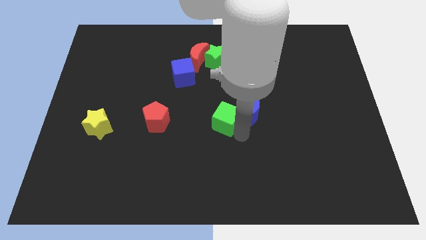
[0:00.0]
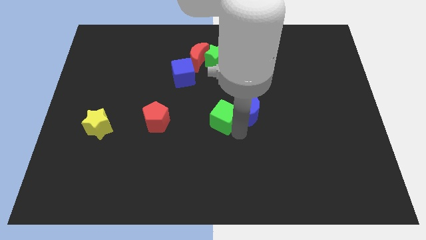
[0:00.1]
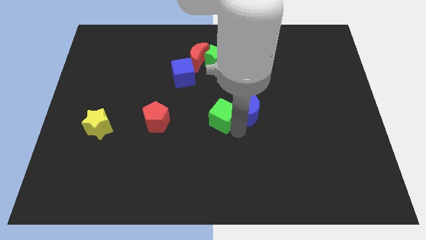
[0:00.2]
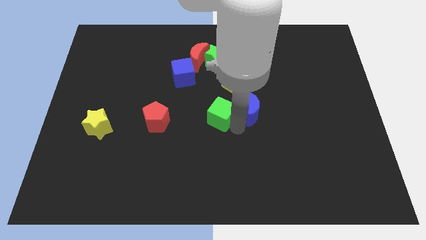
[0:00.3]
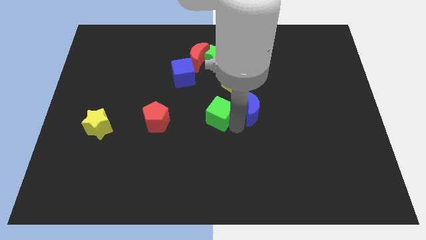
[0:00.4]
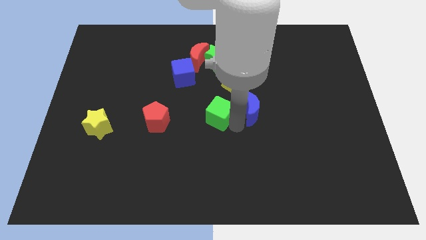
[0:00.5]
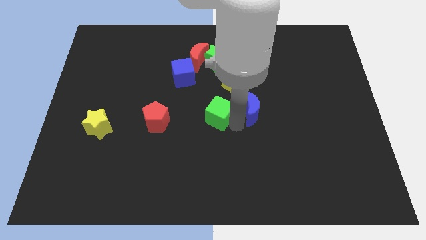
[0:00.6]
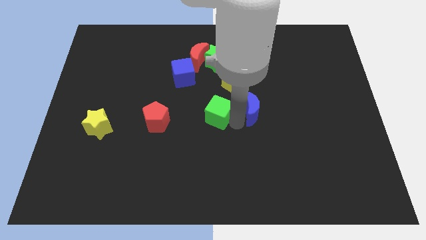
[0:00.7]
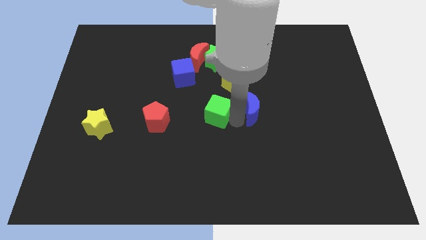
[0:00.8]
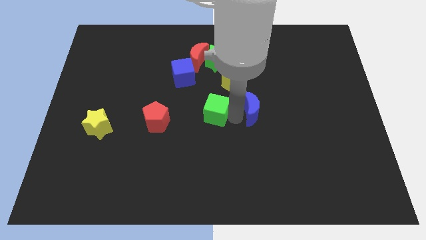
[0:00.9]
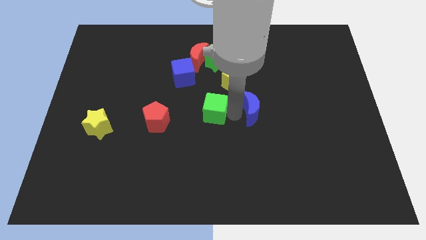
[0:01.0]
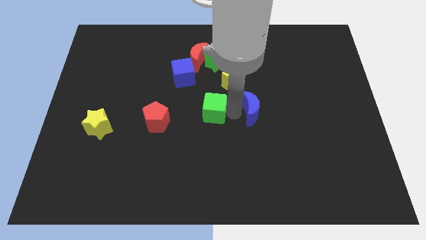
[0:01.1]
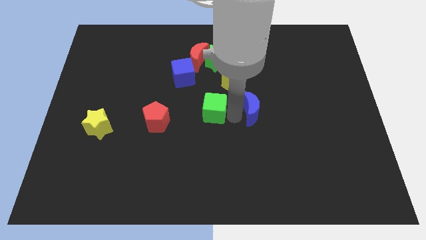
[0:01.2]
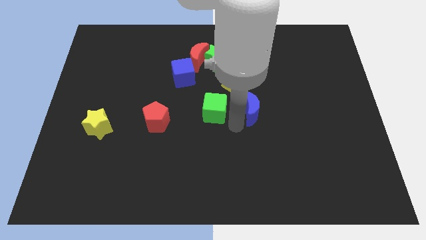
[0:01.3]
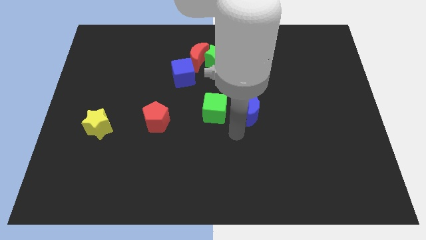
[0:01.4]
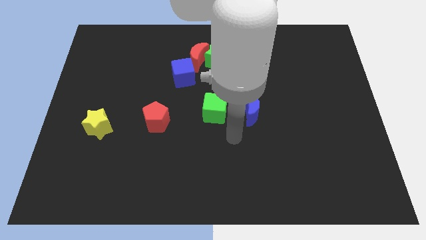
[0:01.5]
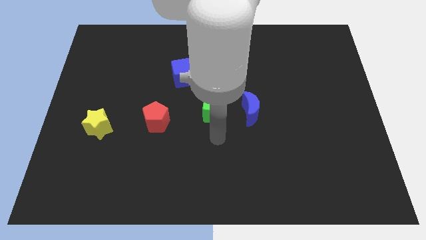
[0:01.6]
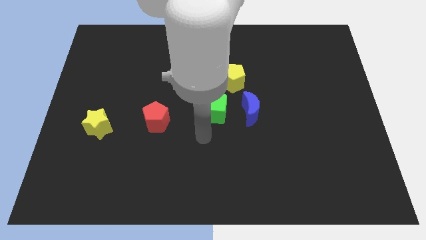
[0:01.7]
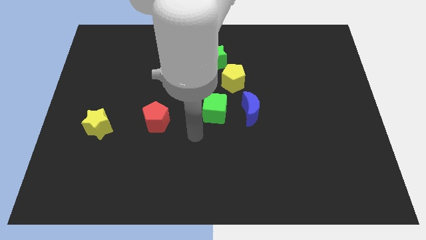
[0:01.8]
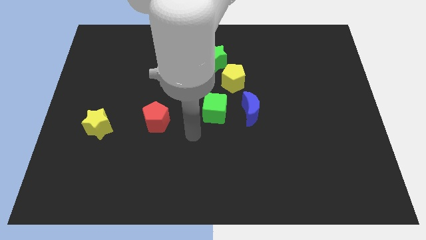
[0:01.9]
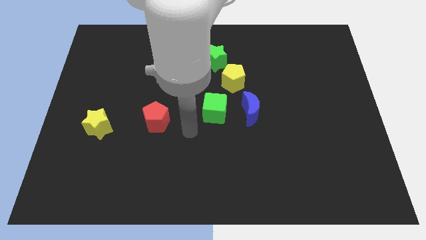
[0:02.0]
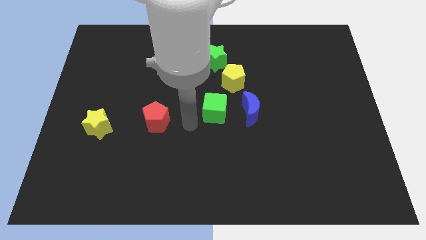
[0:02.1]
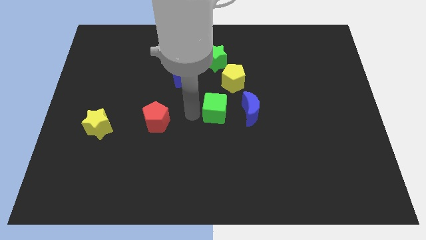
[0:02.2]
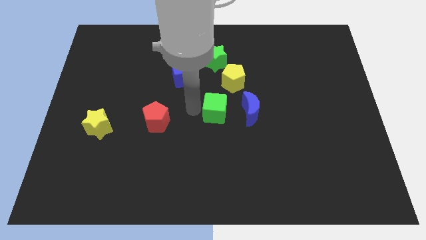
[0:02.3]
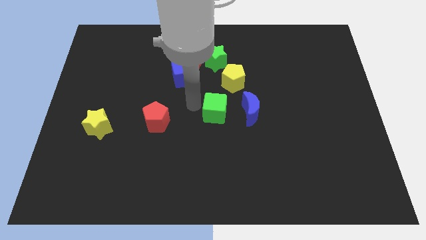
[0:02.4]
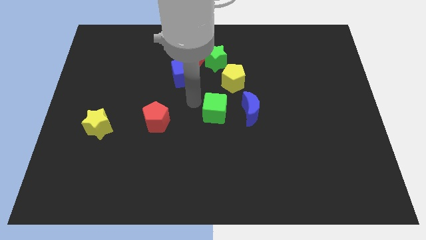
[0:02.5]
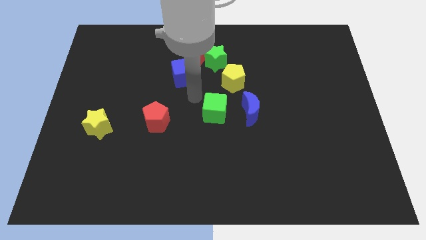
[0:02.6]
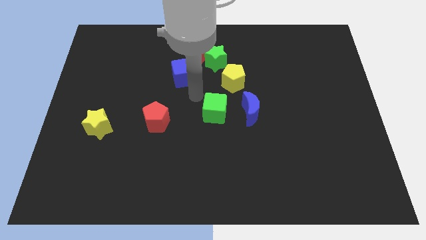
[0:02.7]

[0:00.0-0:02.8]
place the green cube left of blue crescent

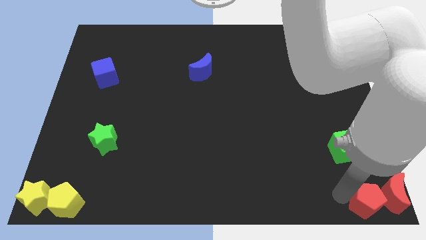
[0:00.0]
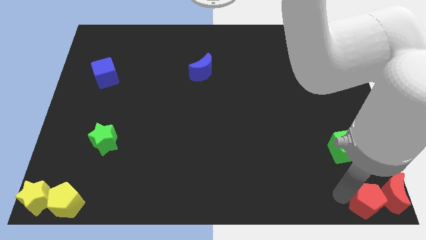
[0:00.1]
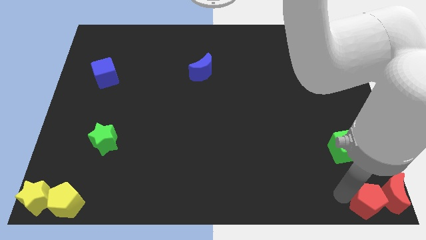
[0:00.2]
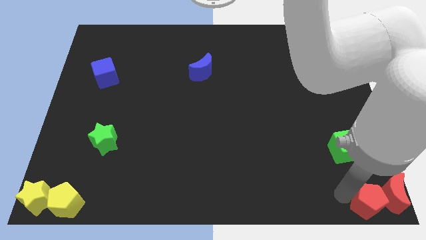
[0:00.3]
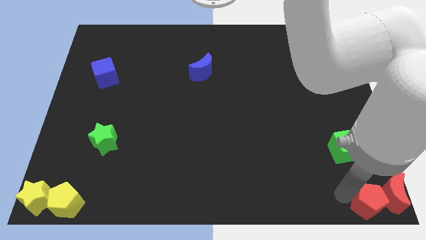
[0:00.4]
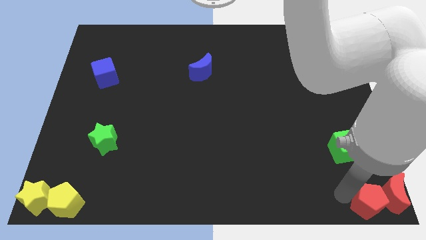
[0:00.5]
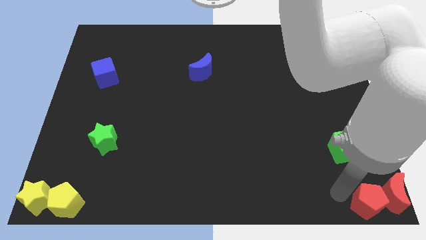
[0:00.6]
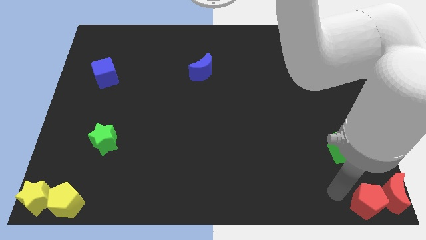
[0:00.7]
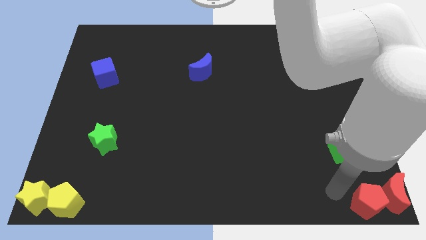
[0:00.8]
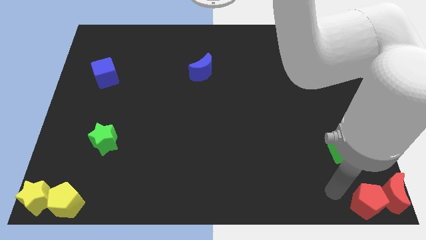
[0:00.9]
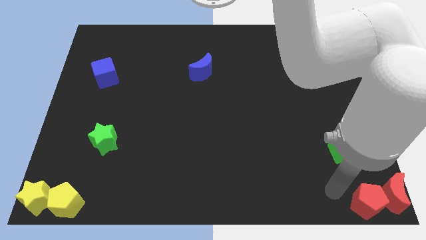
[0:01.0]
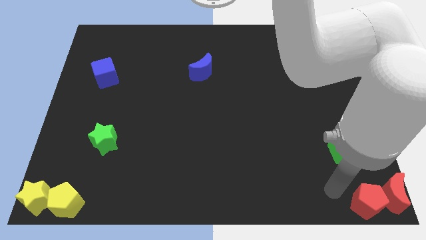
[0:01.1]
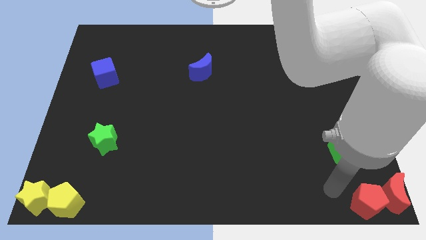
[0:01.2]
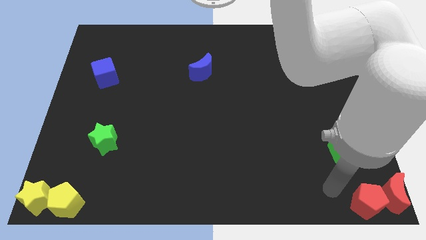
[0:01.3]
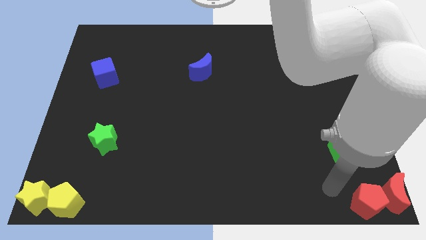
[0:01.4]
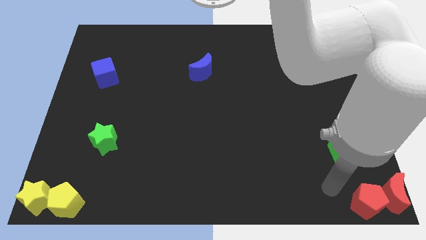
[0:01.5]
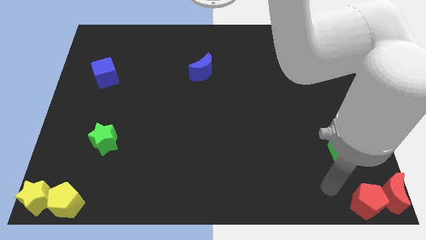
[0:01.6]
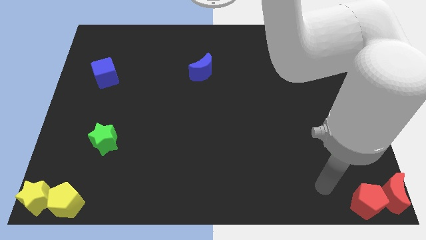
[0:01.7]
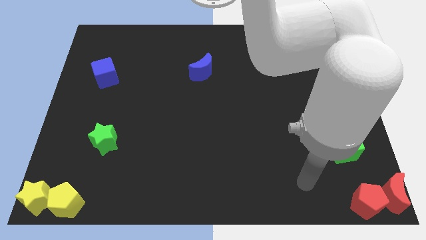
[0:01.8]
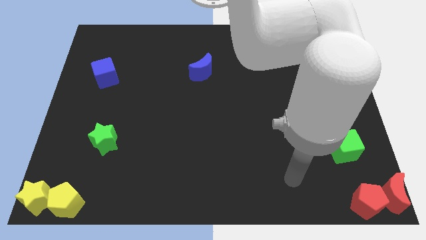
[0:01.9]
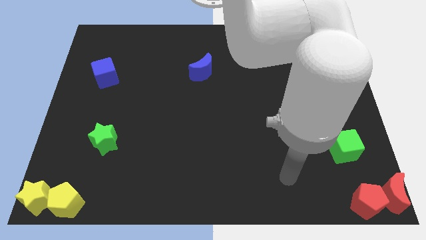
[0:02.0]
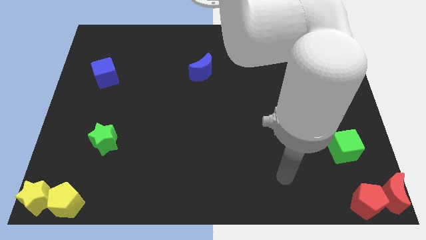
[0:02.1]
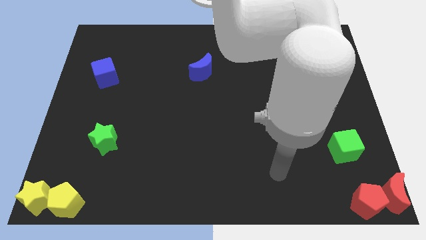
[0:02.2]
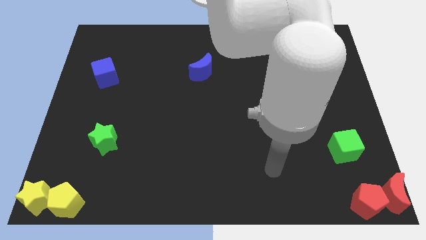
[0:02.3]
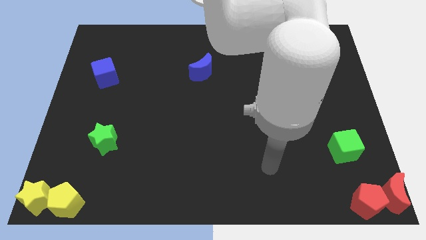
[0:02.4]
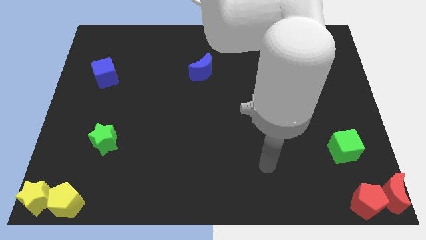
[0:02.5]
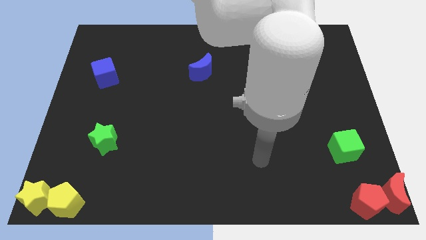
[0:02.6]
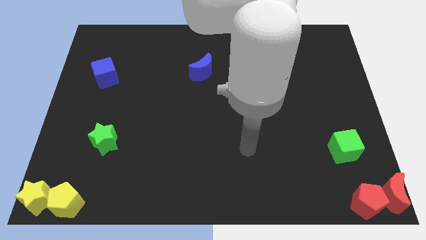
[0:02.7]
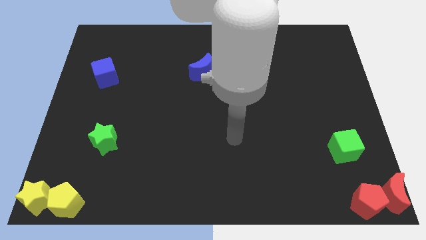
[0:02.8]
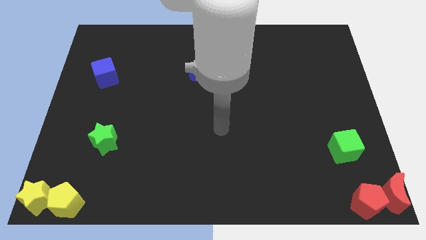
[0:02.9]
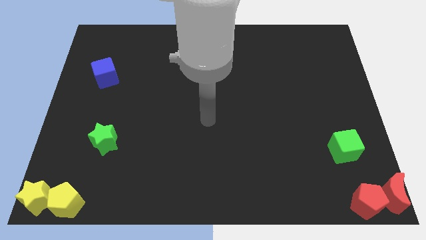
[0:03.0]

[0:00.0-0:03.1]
place your arm towards the centre of the board

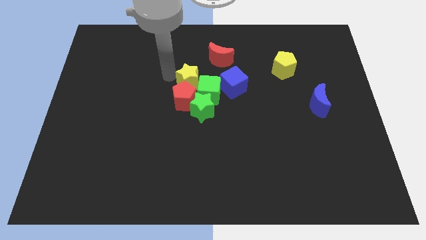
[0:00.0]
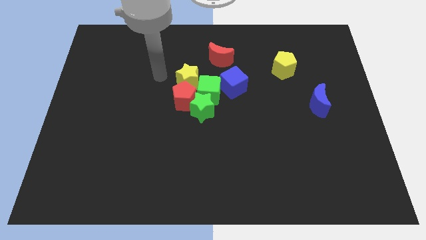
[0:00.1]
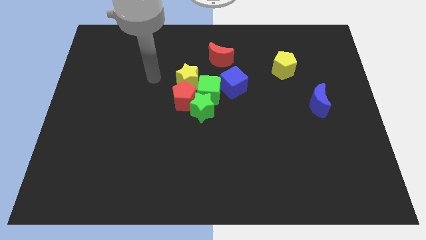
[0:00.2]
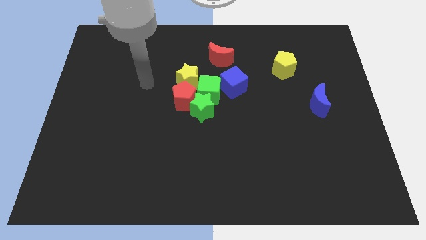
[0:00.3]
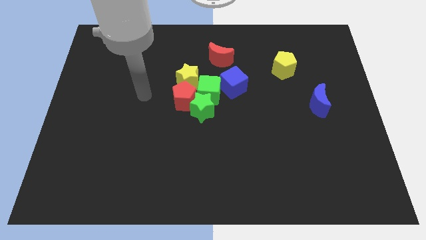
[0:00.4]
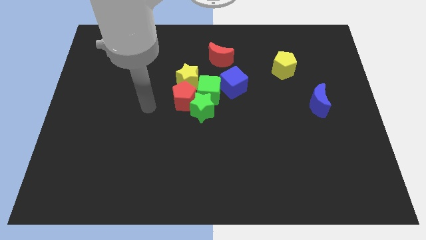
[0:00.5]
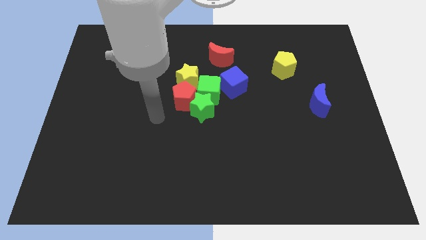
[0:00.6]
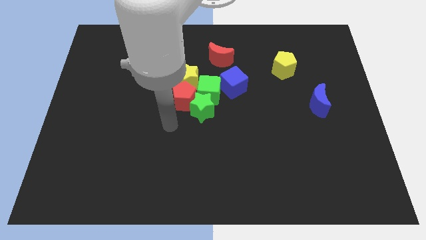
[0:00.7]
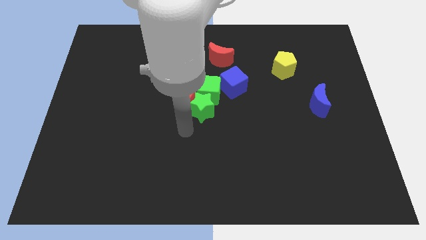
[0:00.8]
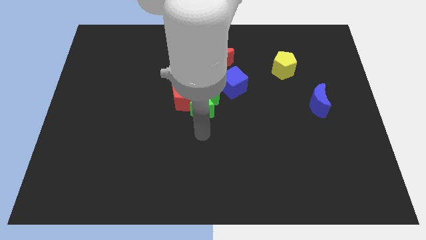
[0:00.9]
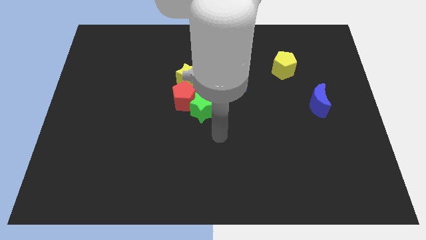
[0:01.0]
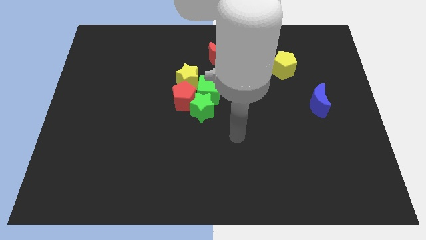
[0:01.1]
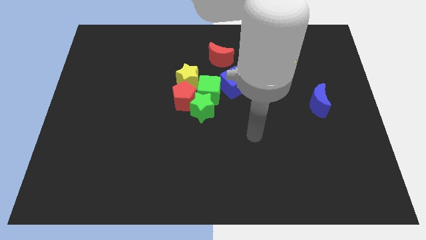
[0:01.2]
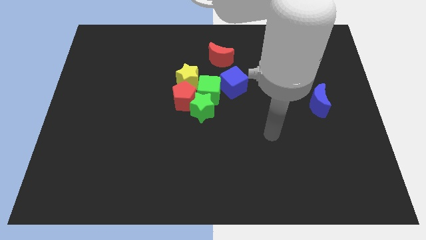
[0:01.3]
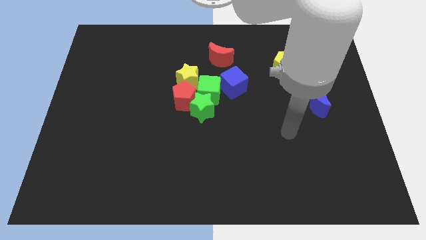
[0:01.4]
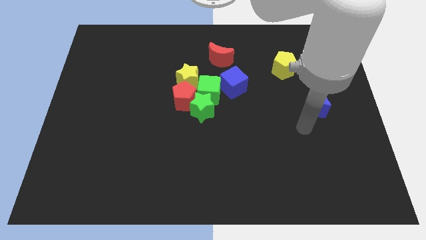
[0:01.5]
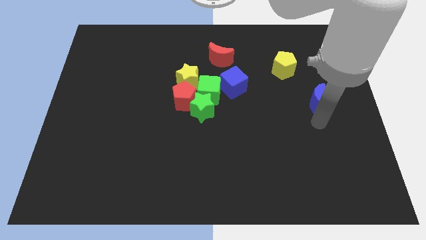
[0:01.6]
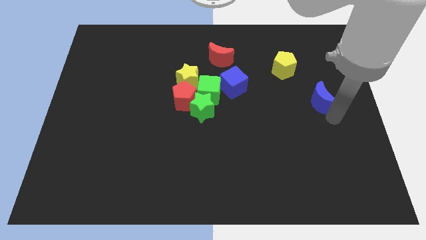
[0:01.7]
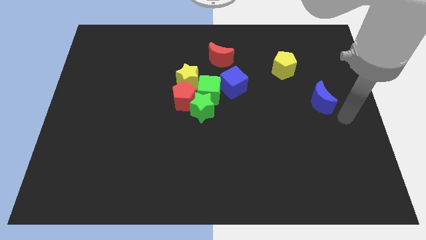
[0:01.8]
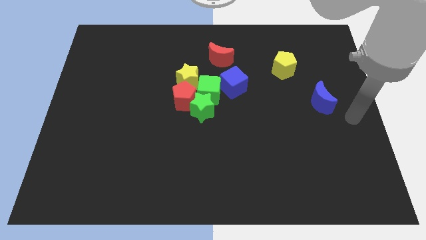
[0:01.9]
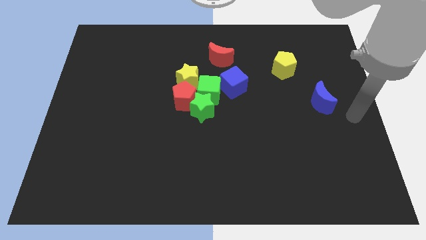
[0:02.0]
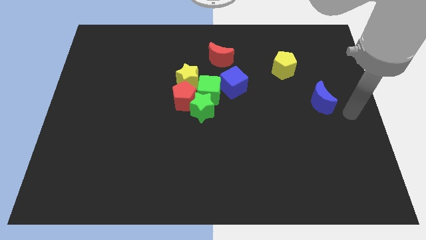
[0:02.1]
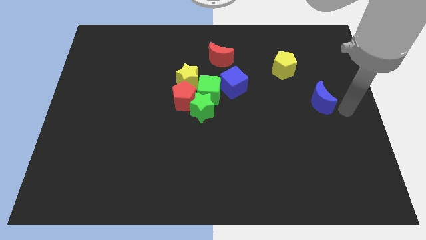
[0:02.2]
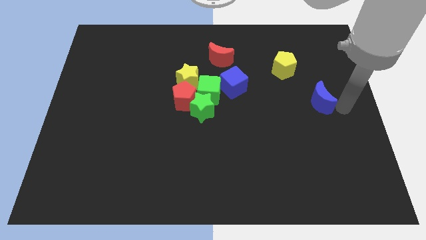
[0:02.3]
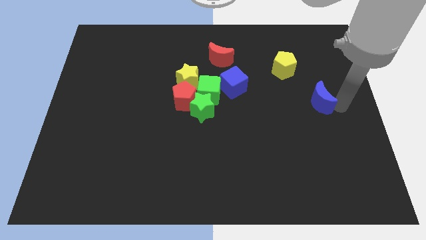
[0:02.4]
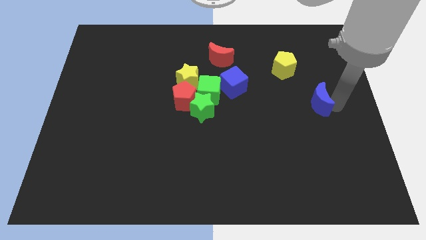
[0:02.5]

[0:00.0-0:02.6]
move your arm to the right of the blue crescent

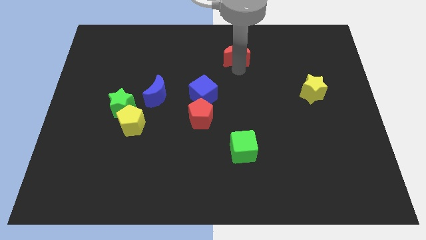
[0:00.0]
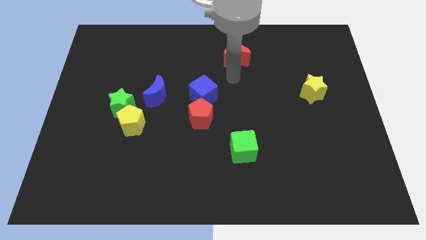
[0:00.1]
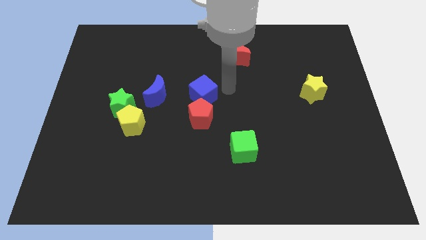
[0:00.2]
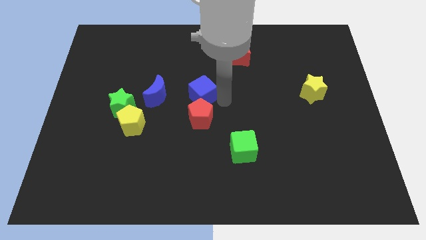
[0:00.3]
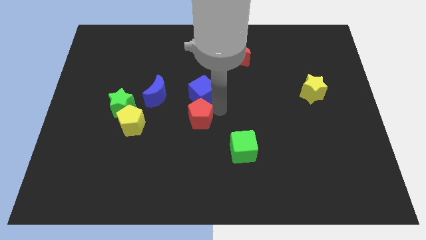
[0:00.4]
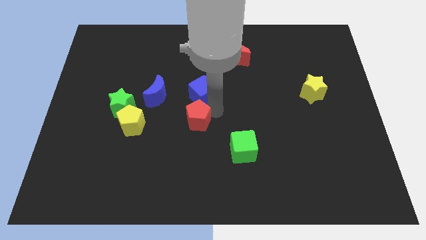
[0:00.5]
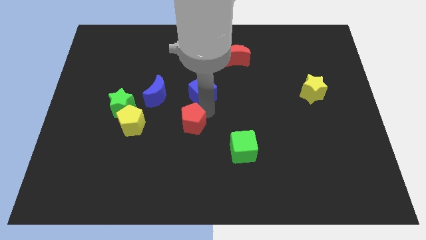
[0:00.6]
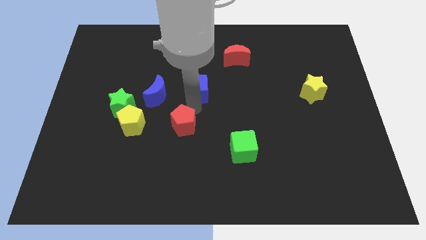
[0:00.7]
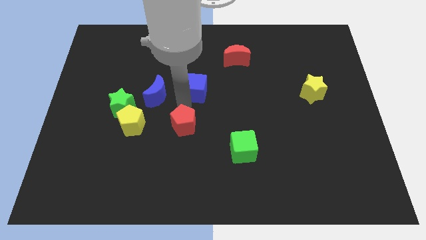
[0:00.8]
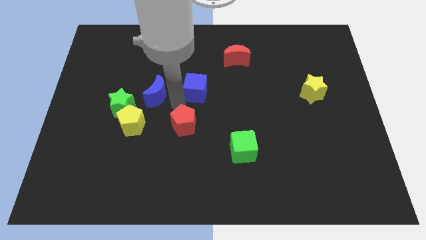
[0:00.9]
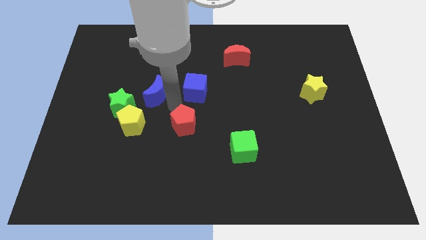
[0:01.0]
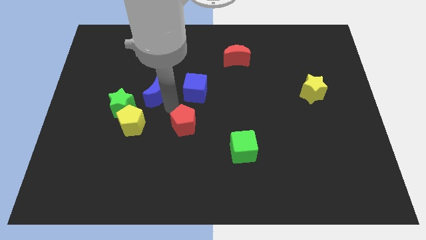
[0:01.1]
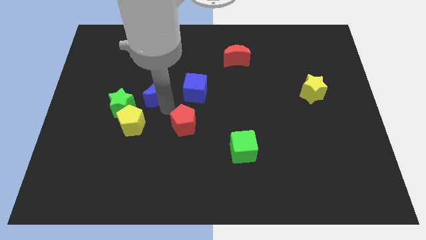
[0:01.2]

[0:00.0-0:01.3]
move your arm away from the red moon
